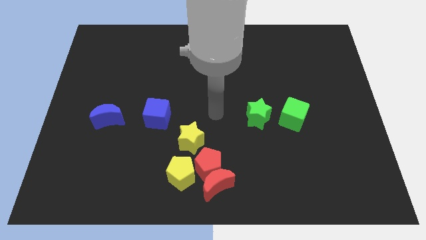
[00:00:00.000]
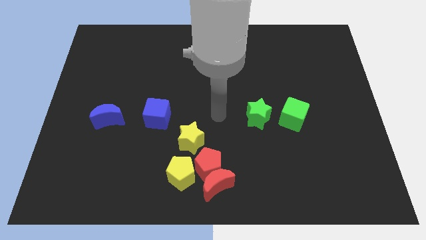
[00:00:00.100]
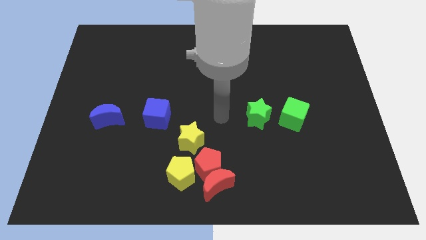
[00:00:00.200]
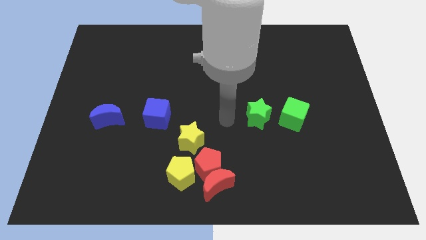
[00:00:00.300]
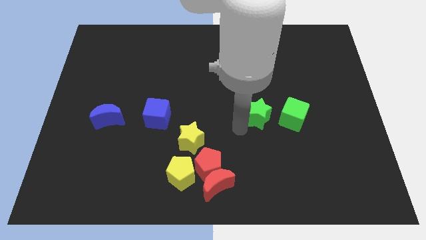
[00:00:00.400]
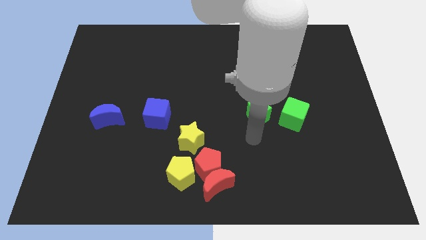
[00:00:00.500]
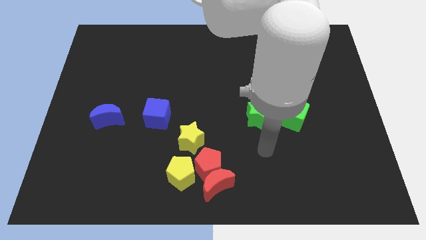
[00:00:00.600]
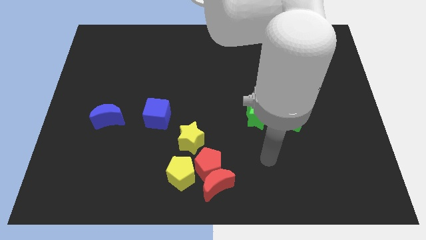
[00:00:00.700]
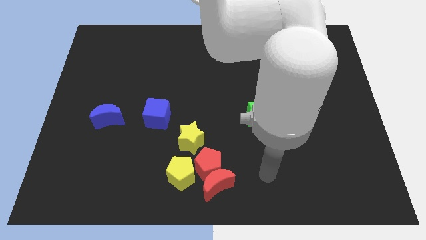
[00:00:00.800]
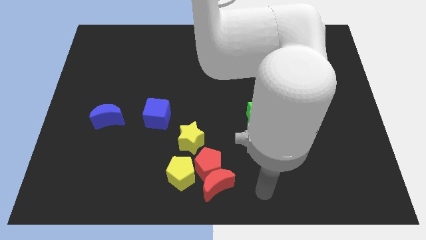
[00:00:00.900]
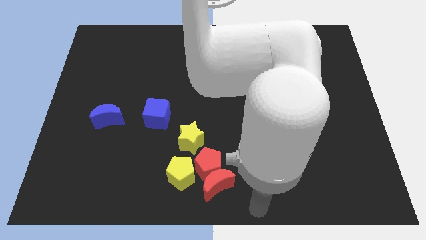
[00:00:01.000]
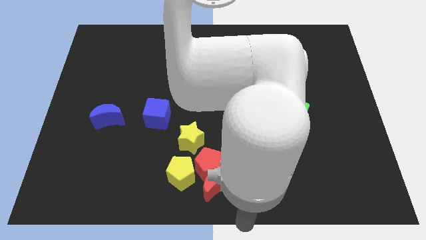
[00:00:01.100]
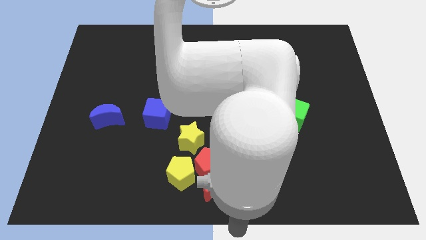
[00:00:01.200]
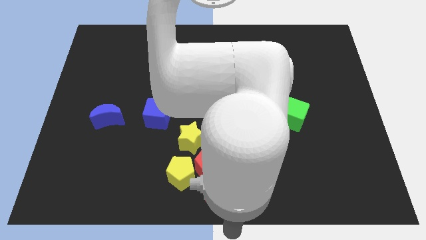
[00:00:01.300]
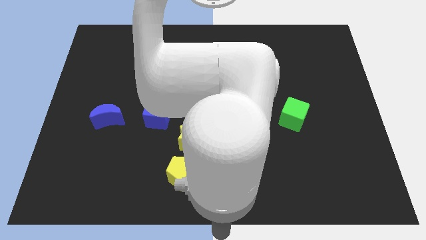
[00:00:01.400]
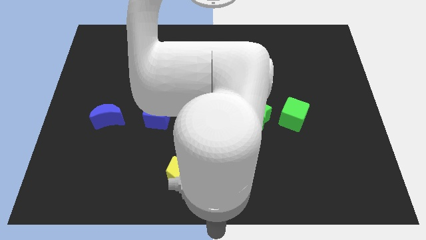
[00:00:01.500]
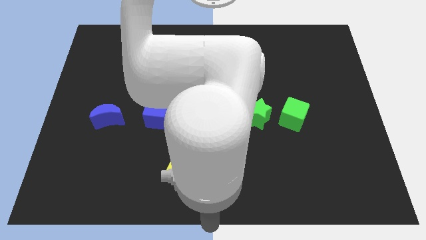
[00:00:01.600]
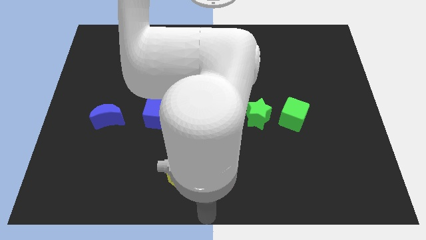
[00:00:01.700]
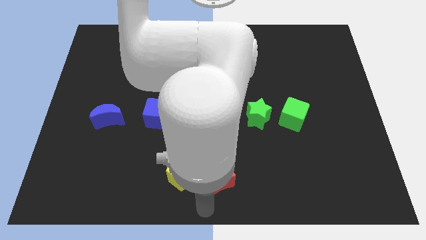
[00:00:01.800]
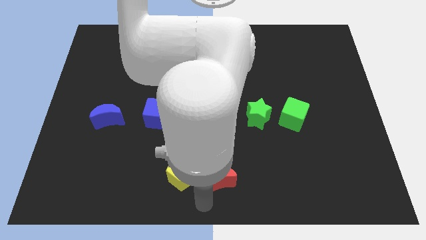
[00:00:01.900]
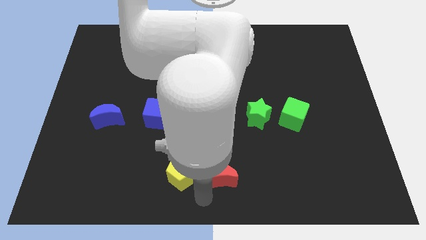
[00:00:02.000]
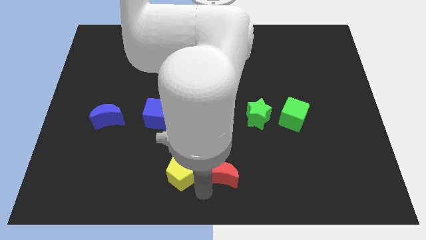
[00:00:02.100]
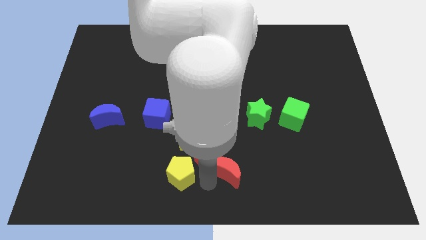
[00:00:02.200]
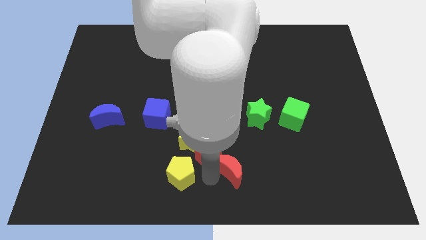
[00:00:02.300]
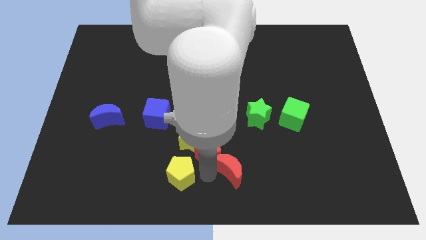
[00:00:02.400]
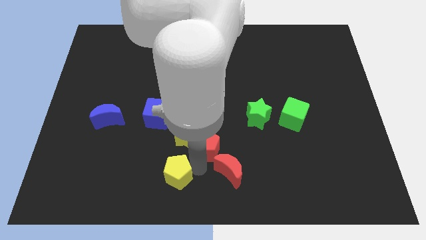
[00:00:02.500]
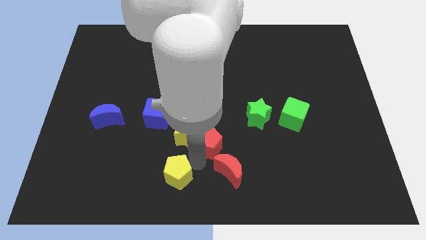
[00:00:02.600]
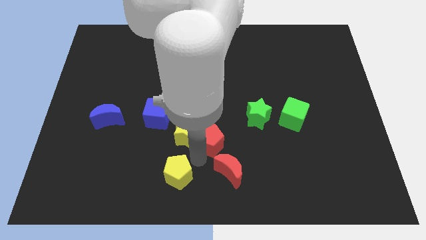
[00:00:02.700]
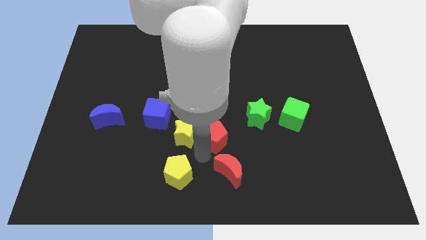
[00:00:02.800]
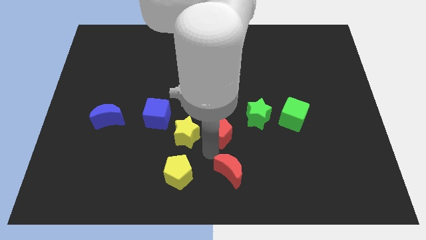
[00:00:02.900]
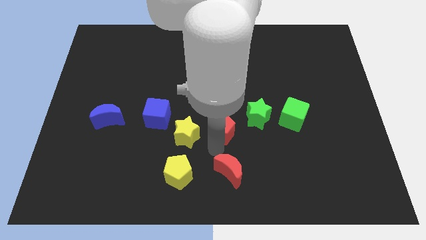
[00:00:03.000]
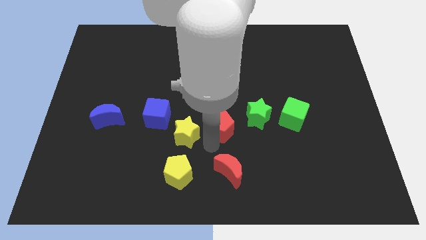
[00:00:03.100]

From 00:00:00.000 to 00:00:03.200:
separate the red pentagon from the red moon

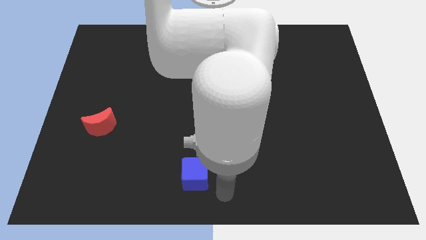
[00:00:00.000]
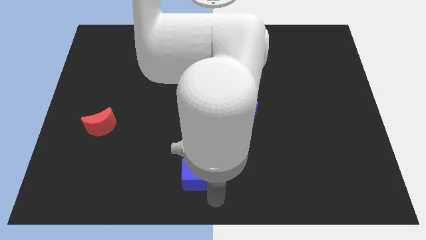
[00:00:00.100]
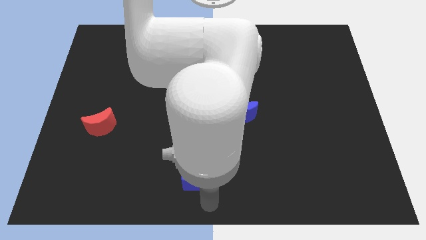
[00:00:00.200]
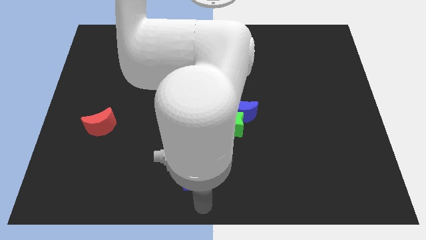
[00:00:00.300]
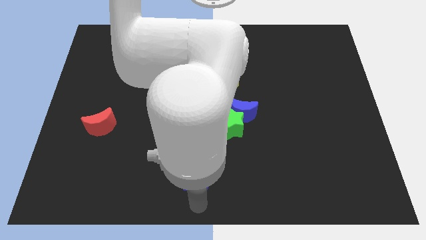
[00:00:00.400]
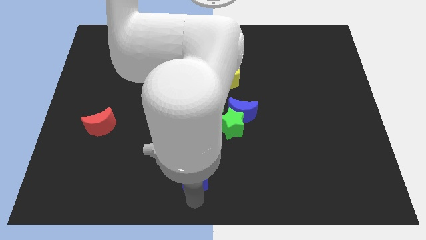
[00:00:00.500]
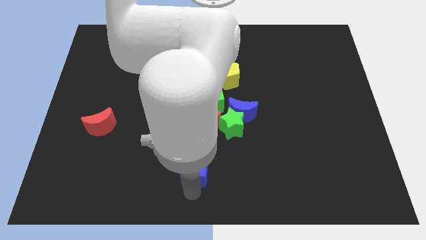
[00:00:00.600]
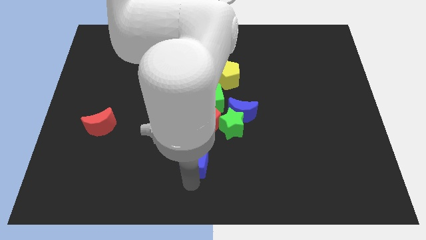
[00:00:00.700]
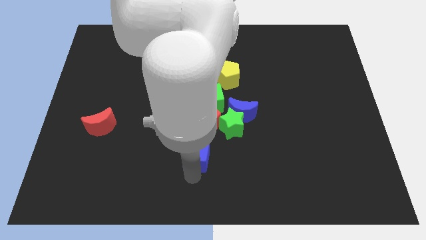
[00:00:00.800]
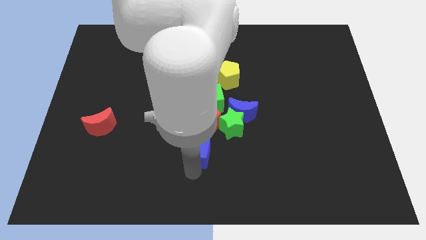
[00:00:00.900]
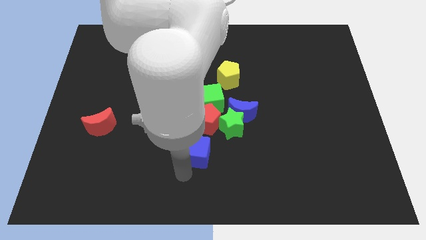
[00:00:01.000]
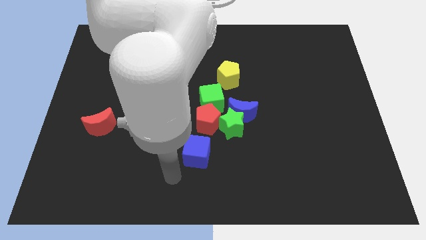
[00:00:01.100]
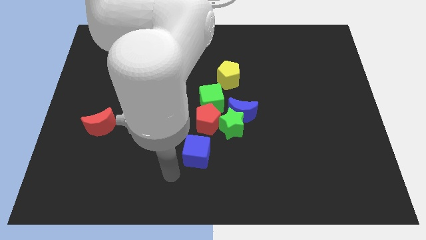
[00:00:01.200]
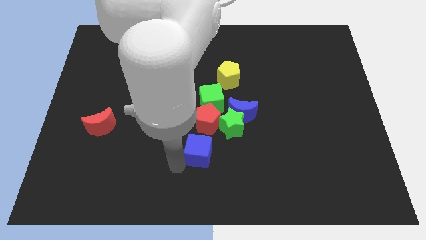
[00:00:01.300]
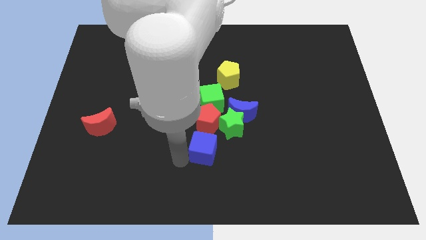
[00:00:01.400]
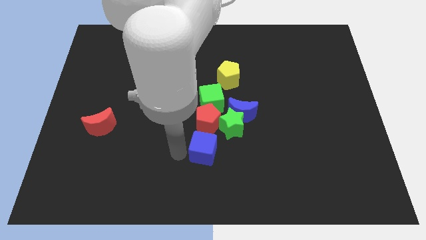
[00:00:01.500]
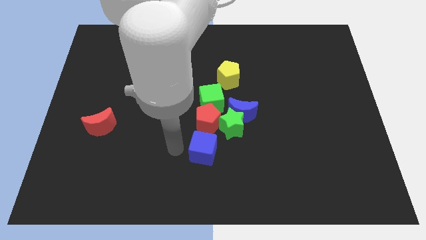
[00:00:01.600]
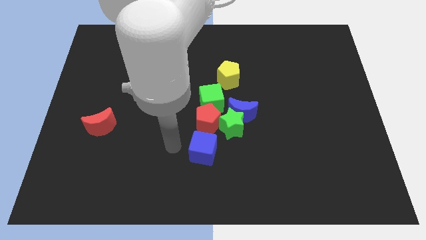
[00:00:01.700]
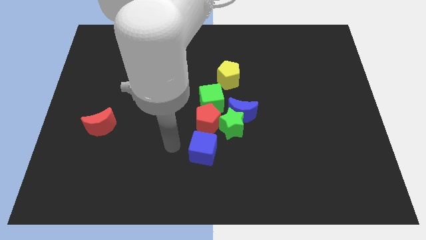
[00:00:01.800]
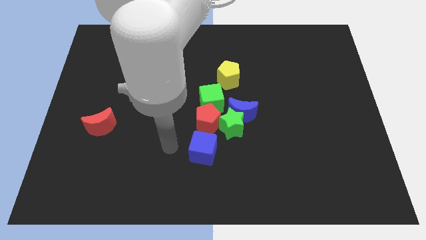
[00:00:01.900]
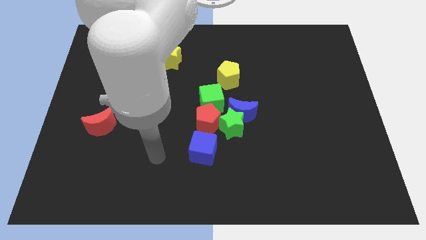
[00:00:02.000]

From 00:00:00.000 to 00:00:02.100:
push the bottom center blue cube into the red pentagon

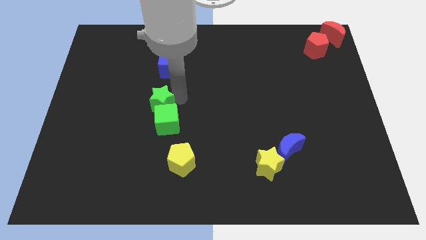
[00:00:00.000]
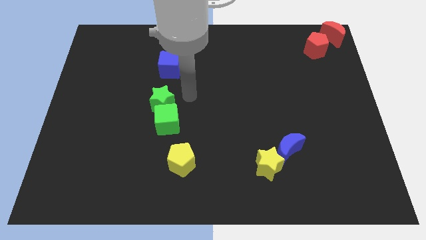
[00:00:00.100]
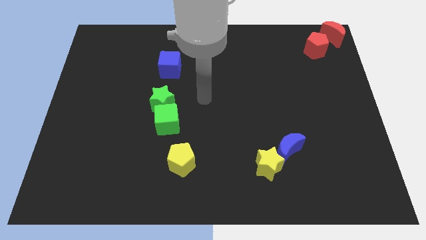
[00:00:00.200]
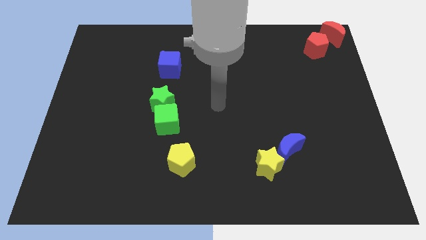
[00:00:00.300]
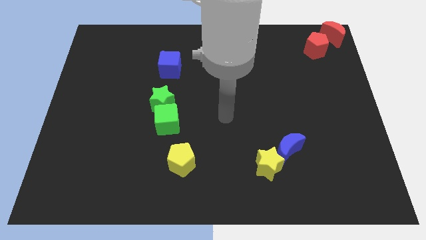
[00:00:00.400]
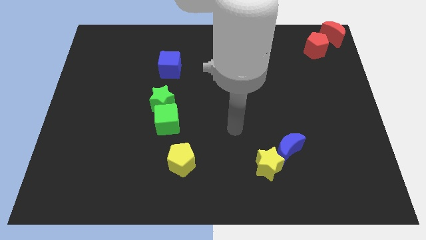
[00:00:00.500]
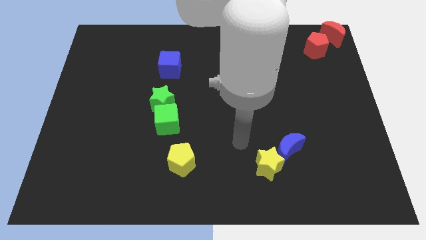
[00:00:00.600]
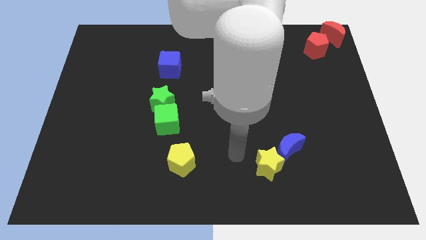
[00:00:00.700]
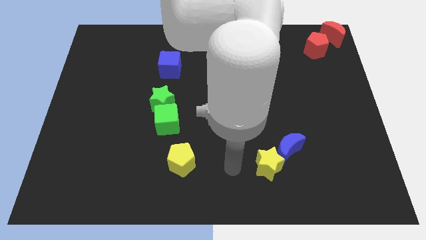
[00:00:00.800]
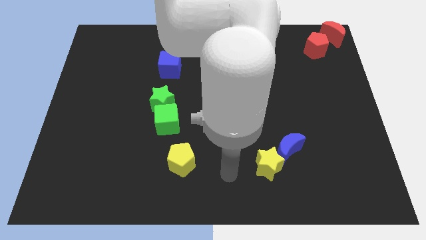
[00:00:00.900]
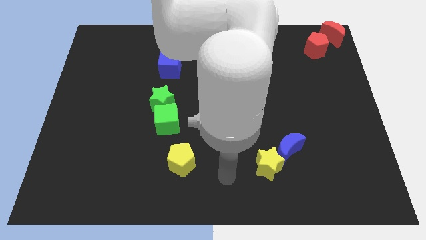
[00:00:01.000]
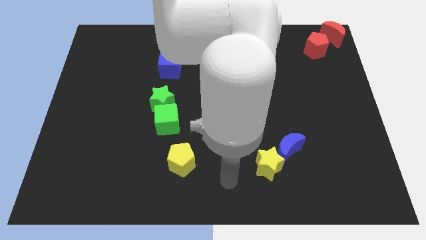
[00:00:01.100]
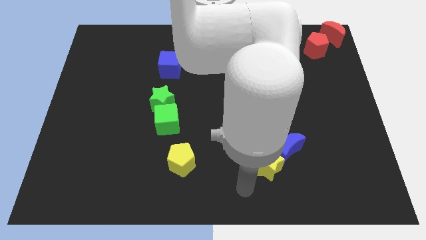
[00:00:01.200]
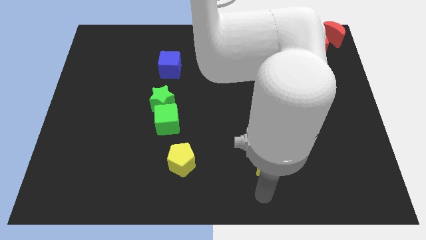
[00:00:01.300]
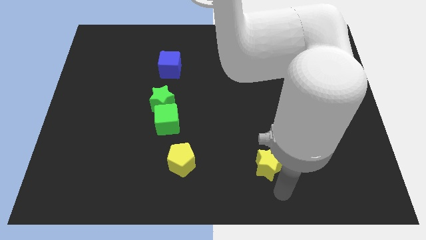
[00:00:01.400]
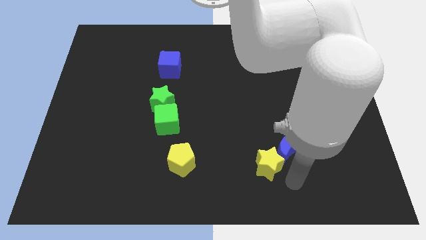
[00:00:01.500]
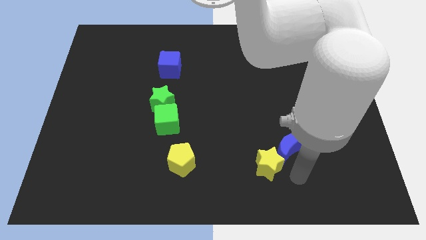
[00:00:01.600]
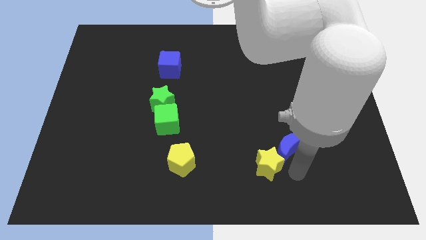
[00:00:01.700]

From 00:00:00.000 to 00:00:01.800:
move your arm to the right side of the yellow star

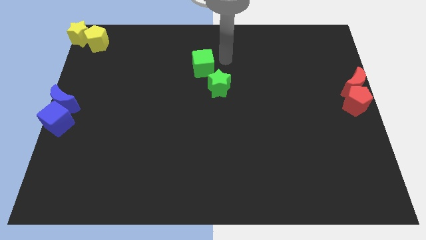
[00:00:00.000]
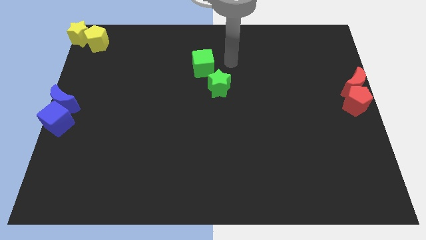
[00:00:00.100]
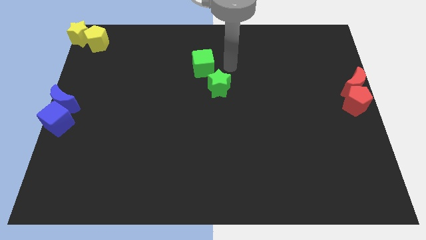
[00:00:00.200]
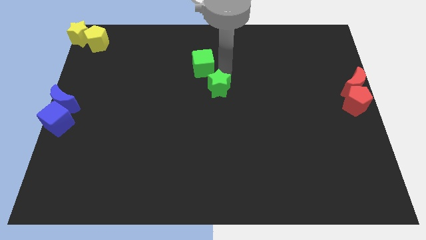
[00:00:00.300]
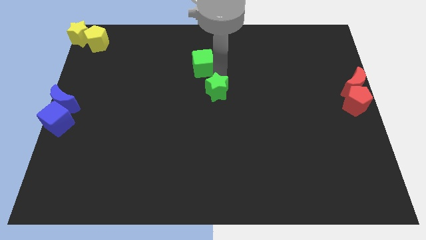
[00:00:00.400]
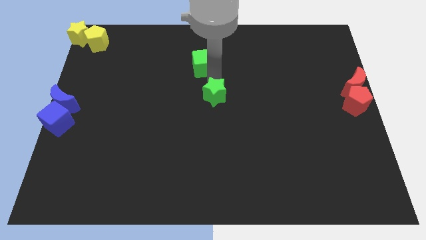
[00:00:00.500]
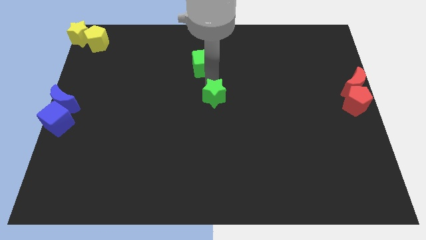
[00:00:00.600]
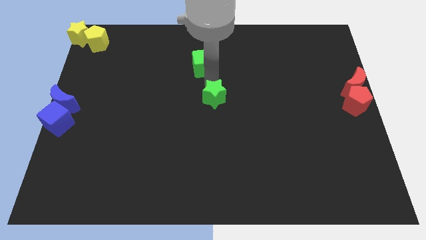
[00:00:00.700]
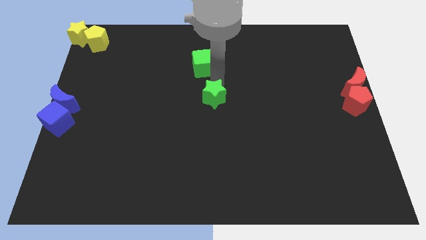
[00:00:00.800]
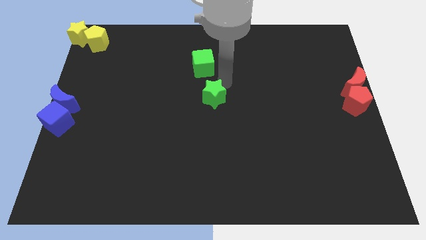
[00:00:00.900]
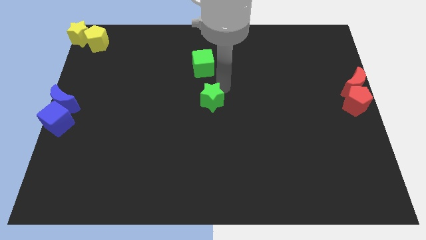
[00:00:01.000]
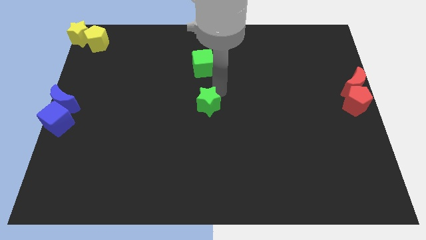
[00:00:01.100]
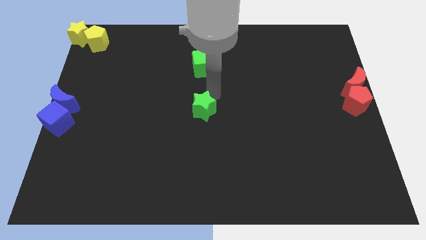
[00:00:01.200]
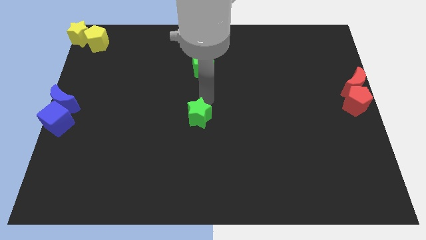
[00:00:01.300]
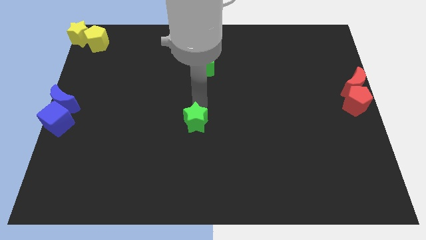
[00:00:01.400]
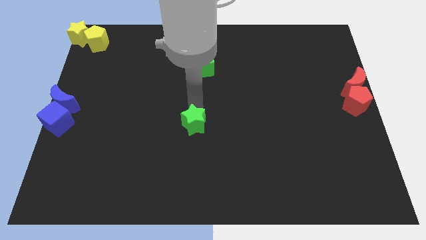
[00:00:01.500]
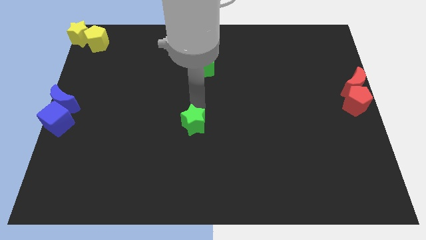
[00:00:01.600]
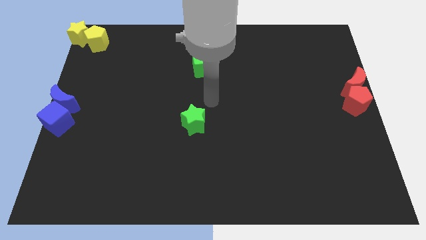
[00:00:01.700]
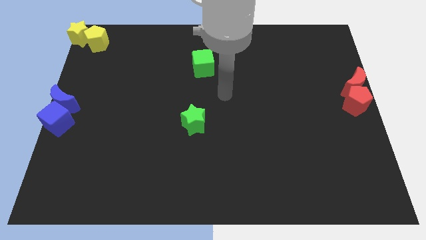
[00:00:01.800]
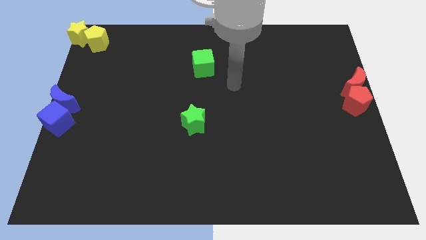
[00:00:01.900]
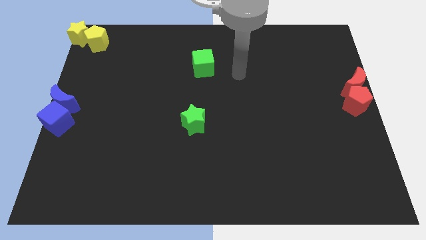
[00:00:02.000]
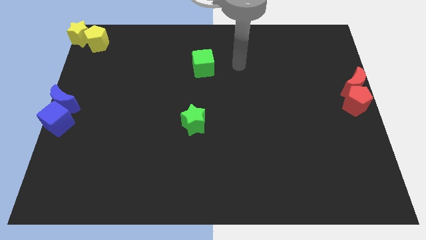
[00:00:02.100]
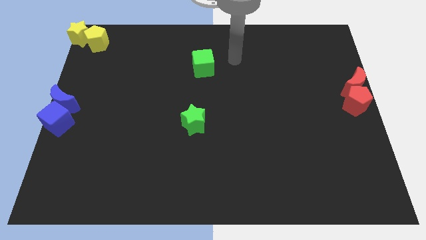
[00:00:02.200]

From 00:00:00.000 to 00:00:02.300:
push the green star away from the green cube
